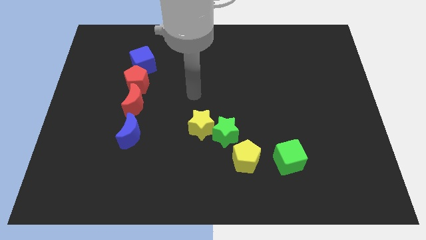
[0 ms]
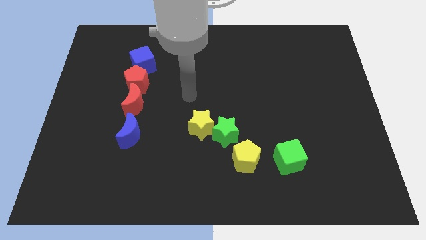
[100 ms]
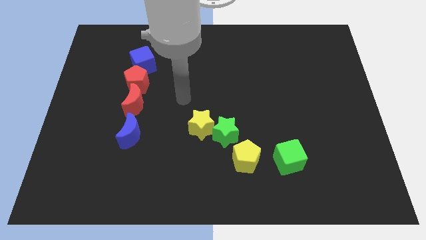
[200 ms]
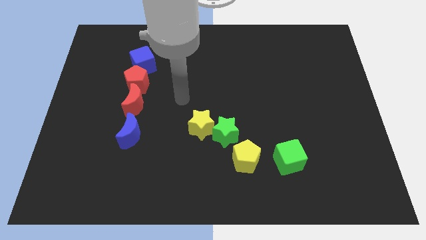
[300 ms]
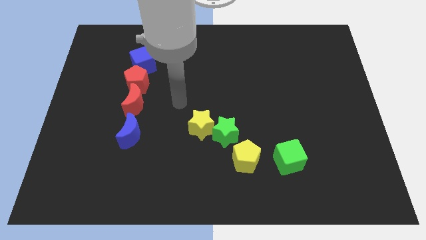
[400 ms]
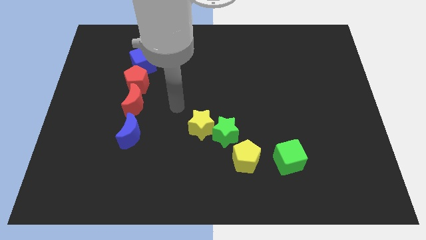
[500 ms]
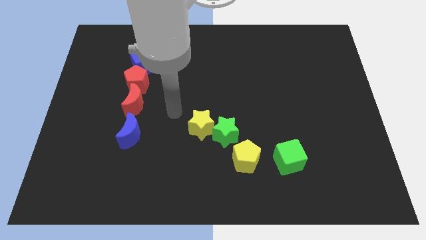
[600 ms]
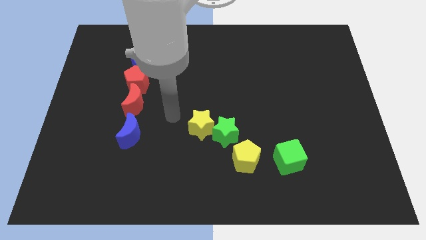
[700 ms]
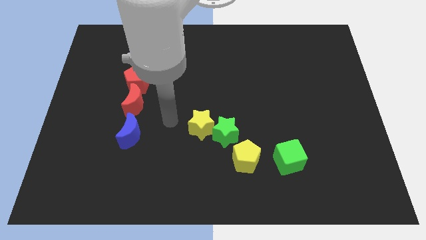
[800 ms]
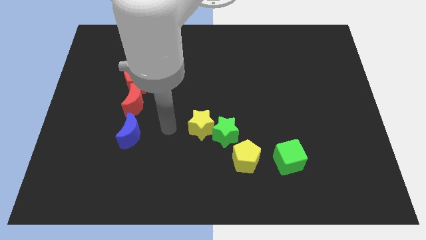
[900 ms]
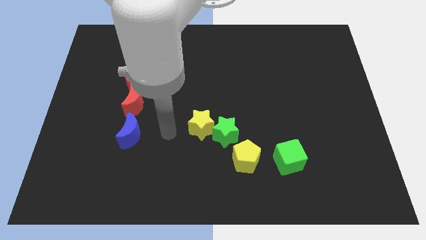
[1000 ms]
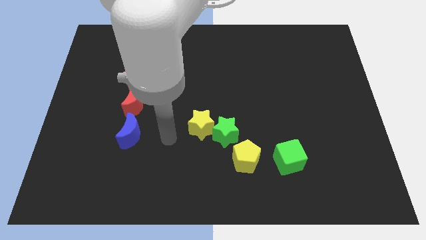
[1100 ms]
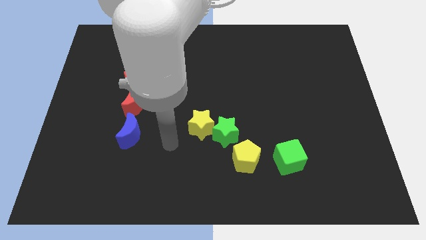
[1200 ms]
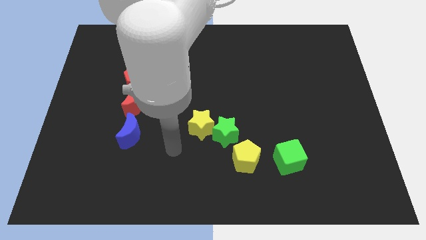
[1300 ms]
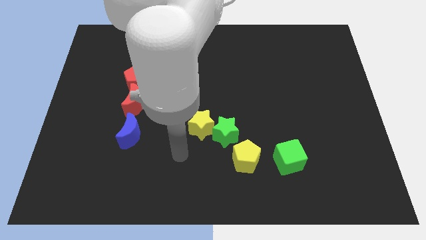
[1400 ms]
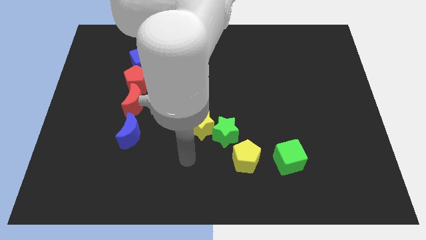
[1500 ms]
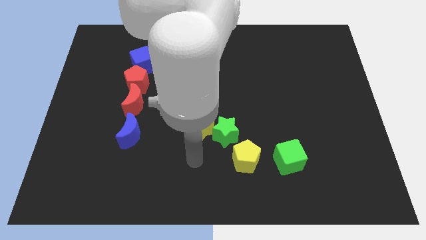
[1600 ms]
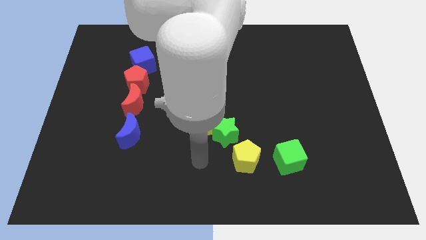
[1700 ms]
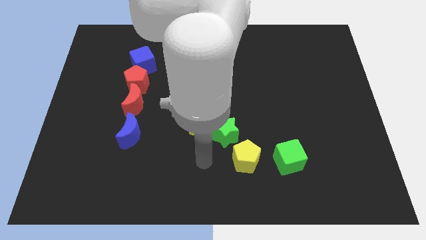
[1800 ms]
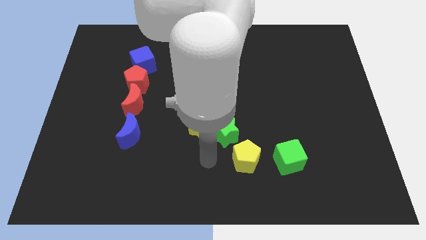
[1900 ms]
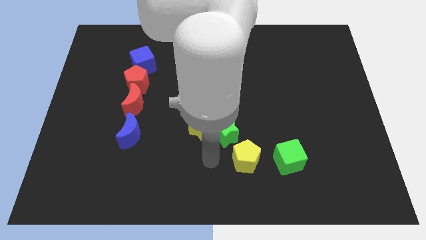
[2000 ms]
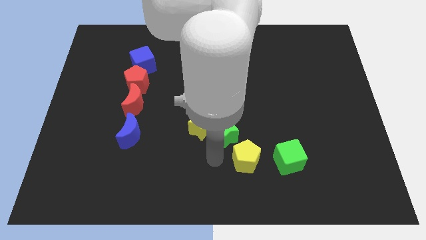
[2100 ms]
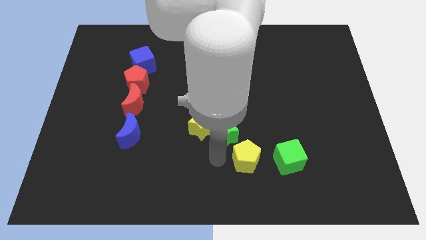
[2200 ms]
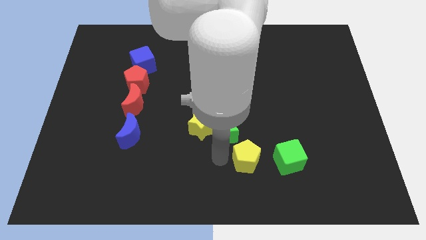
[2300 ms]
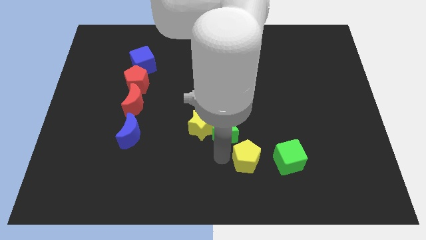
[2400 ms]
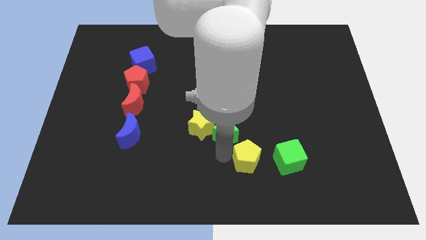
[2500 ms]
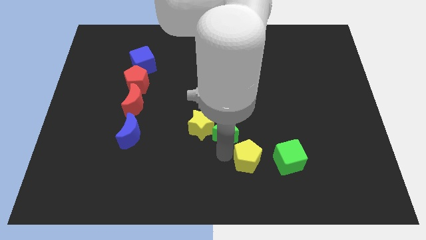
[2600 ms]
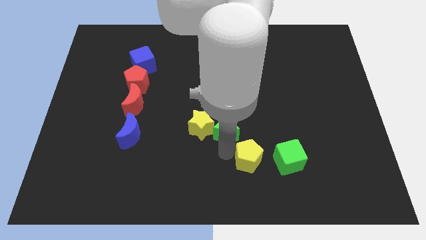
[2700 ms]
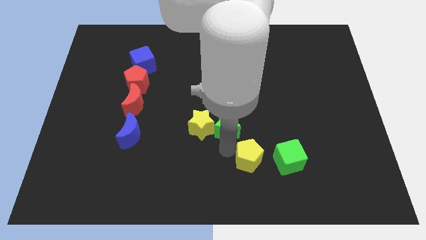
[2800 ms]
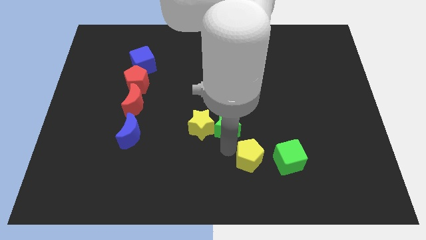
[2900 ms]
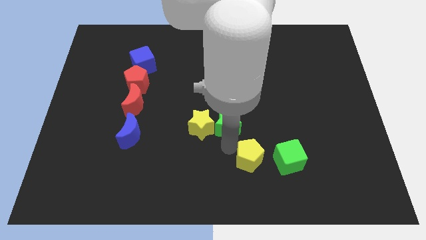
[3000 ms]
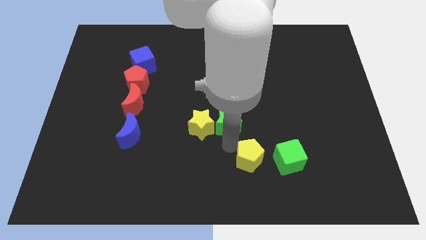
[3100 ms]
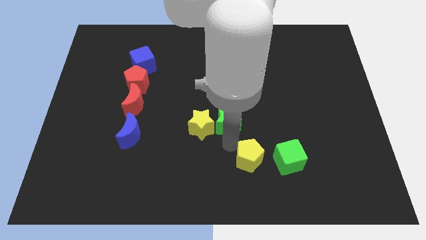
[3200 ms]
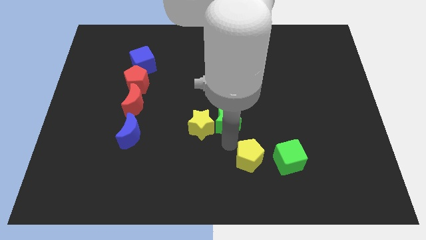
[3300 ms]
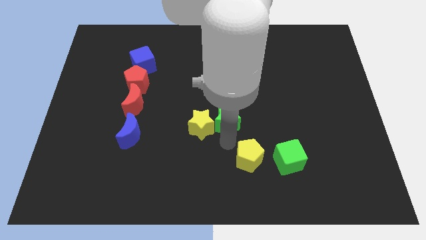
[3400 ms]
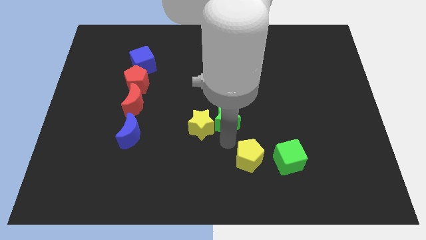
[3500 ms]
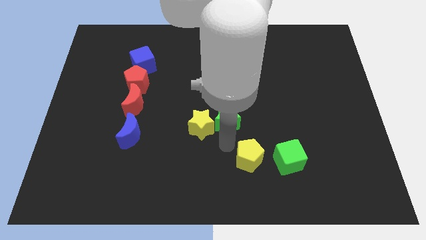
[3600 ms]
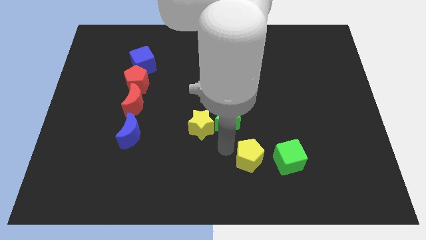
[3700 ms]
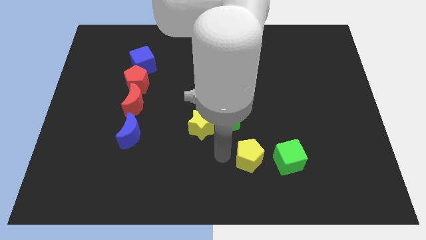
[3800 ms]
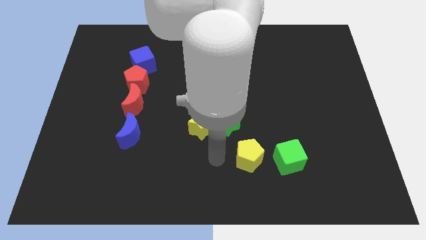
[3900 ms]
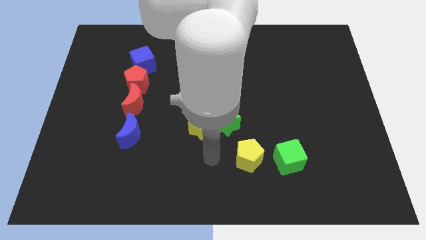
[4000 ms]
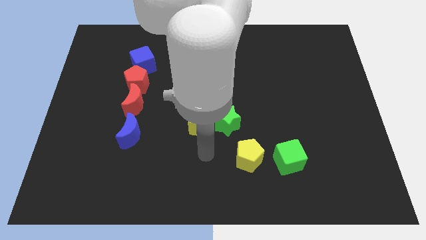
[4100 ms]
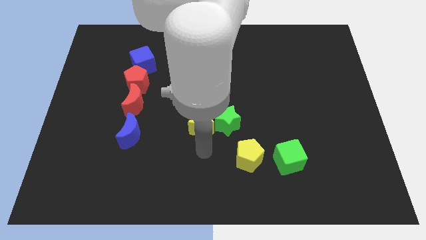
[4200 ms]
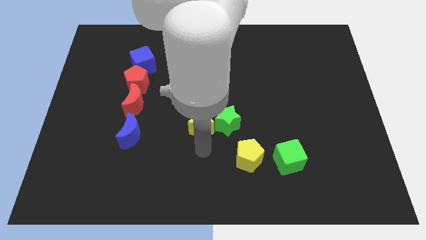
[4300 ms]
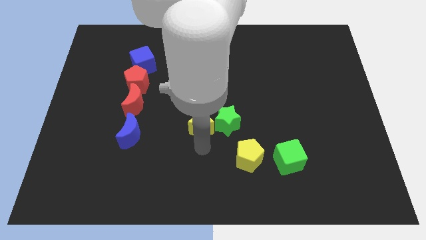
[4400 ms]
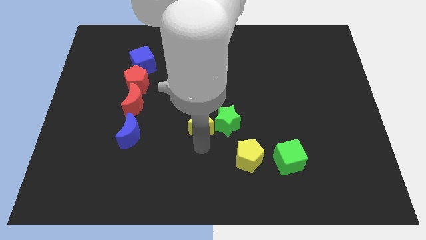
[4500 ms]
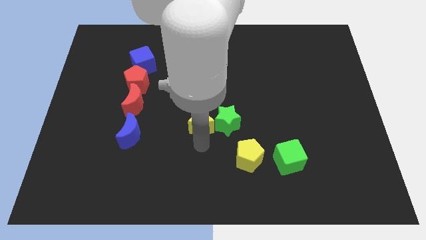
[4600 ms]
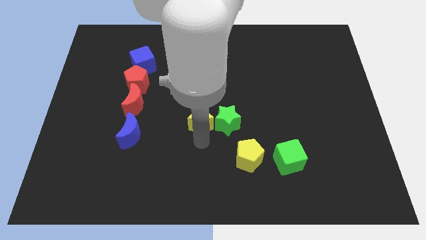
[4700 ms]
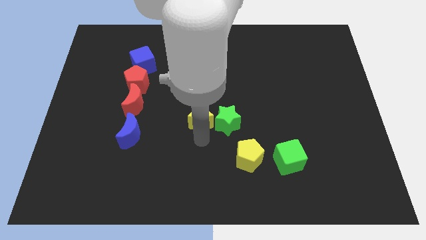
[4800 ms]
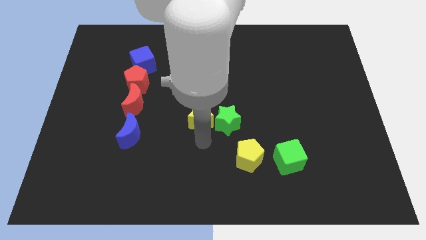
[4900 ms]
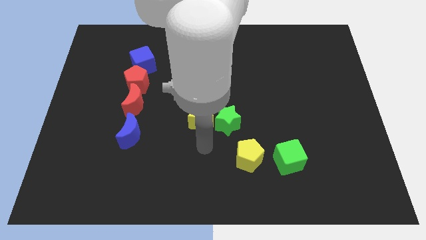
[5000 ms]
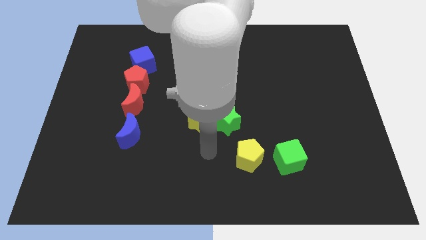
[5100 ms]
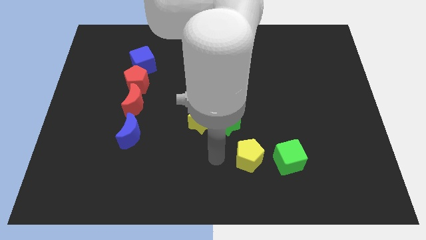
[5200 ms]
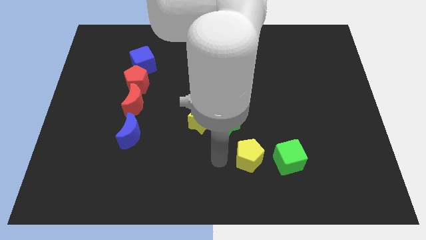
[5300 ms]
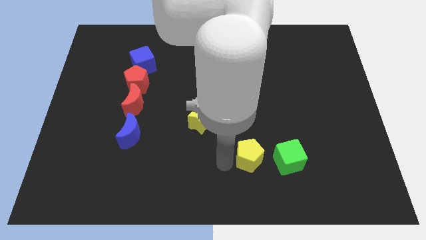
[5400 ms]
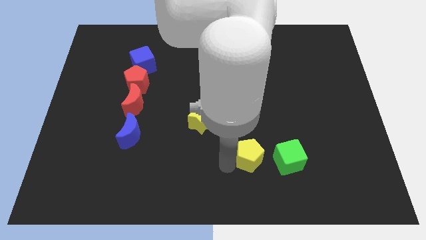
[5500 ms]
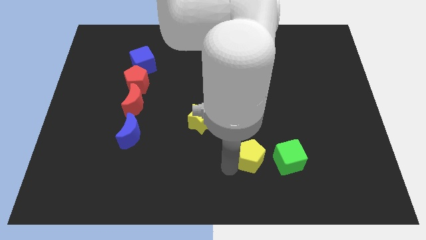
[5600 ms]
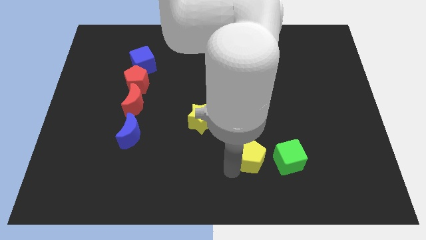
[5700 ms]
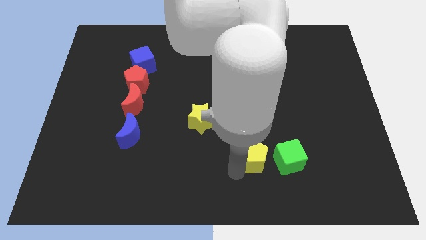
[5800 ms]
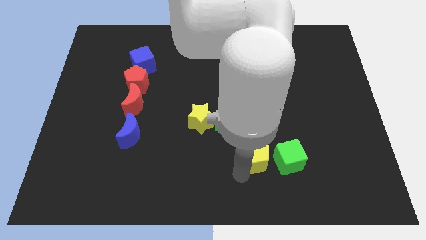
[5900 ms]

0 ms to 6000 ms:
move the yellow and green stars slightly above

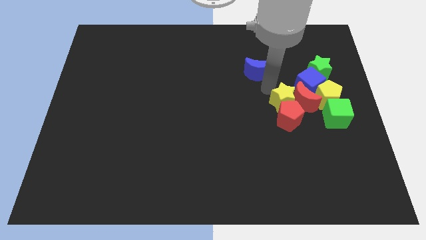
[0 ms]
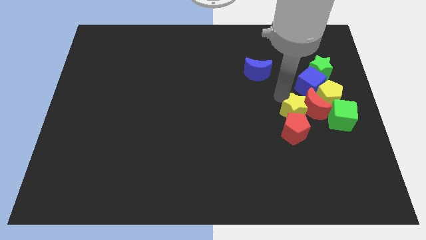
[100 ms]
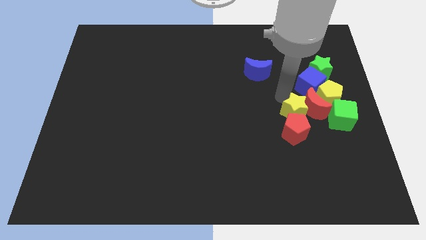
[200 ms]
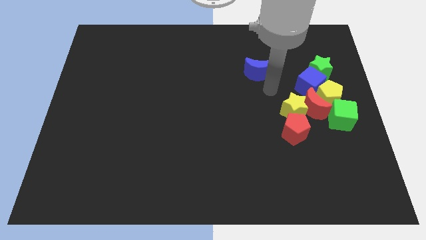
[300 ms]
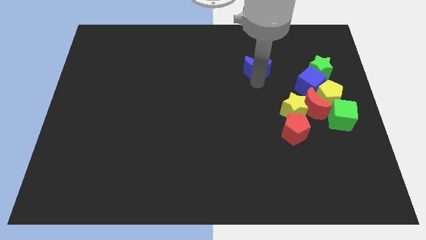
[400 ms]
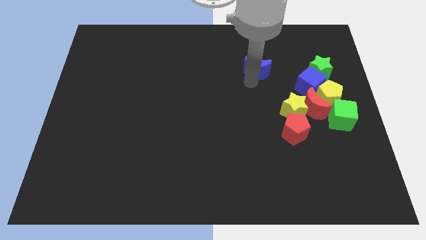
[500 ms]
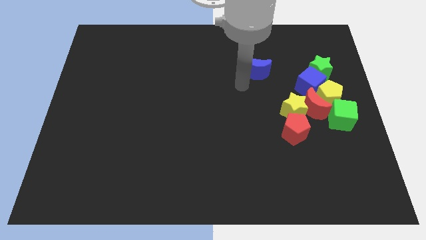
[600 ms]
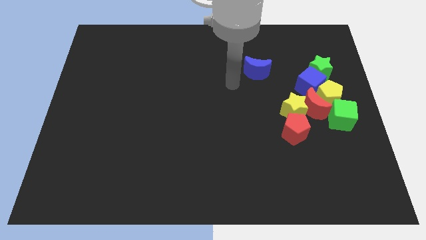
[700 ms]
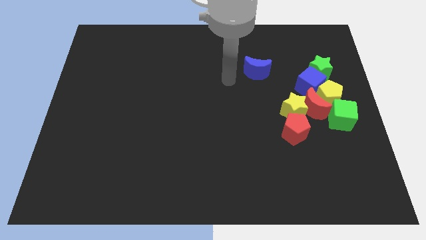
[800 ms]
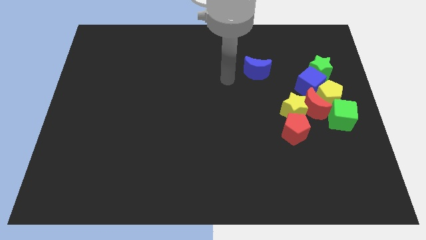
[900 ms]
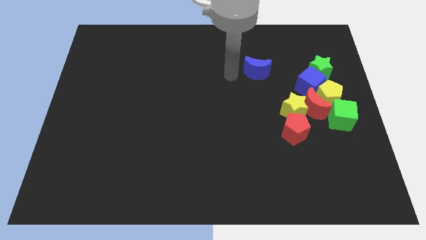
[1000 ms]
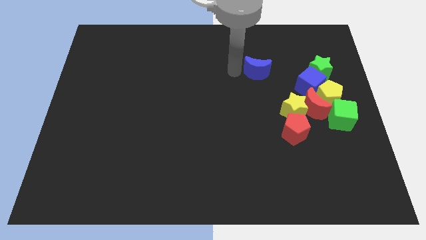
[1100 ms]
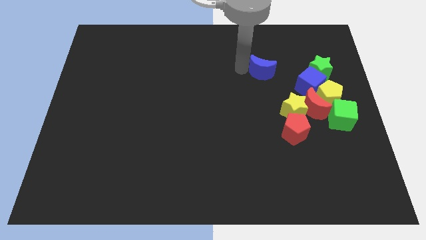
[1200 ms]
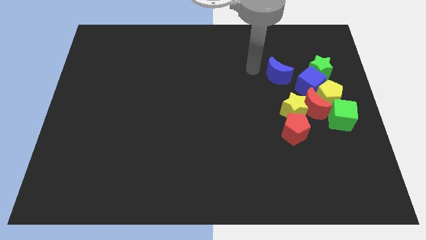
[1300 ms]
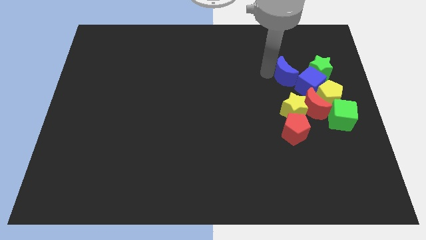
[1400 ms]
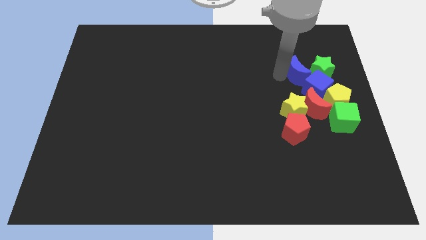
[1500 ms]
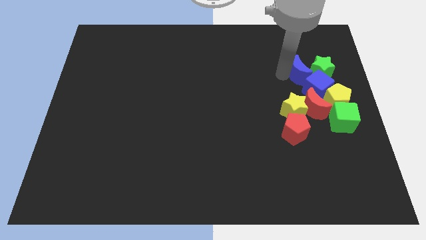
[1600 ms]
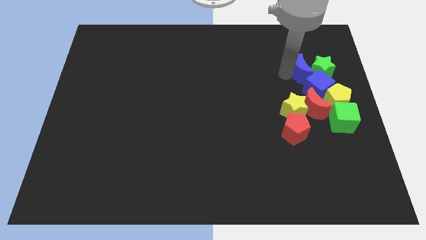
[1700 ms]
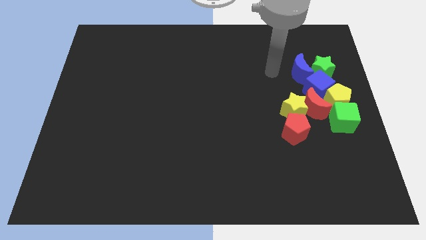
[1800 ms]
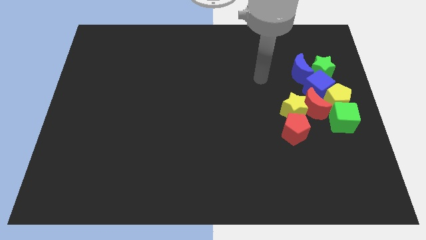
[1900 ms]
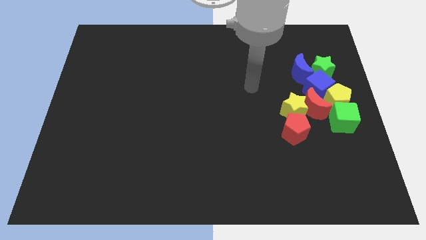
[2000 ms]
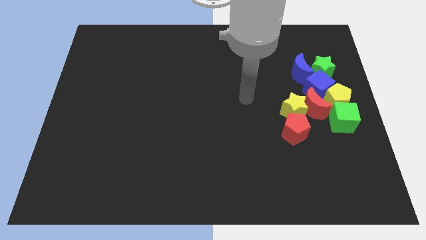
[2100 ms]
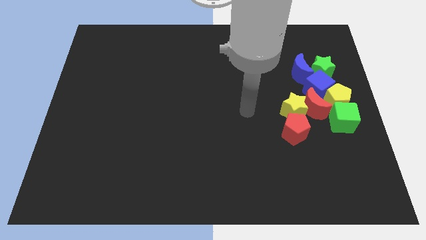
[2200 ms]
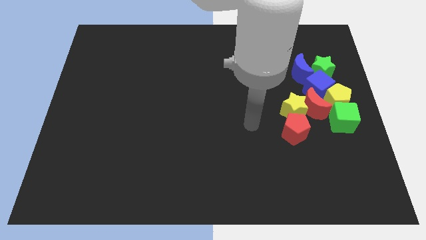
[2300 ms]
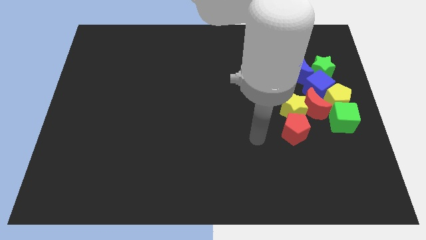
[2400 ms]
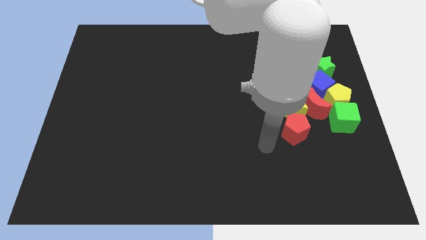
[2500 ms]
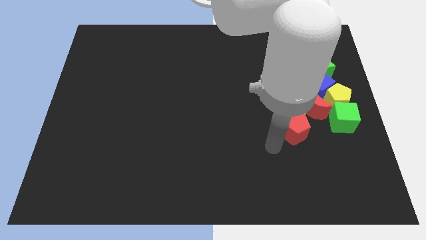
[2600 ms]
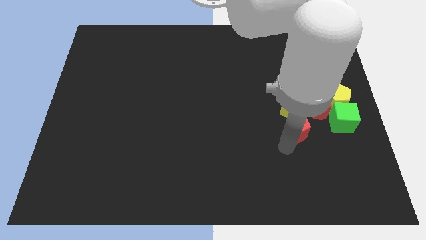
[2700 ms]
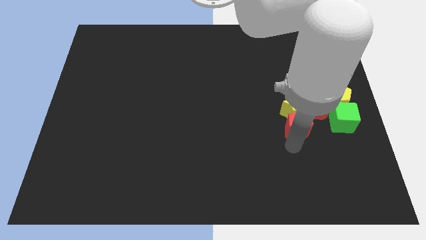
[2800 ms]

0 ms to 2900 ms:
push blue moon into the blue cube
